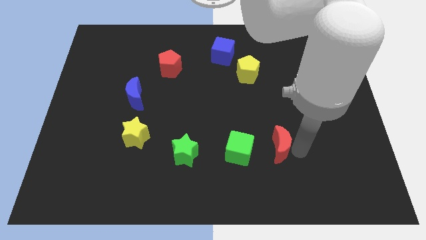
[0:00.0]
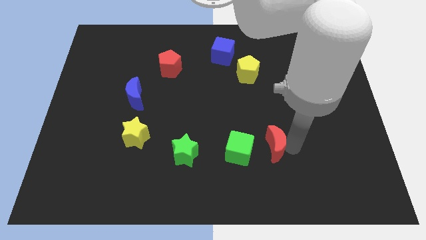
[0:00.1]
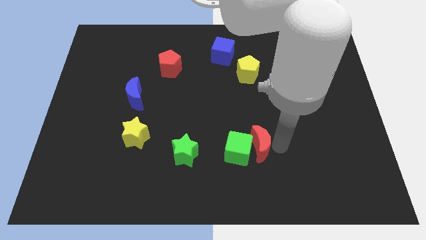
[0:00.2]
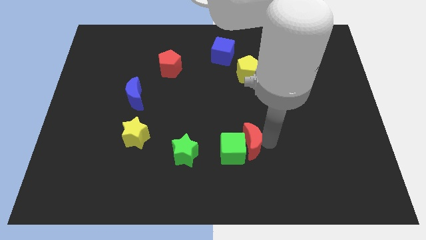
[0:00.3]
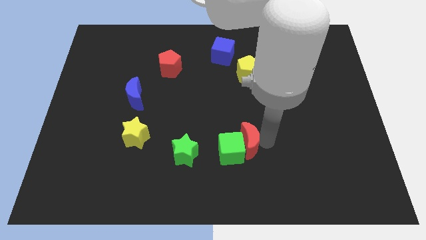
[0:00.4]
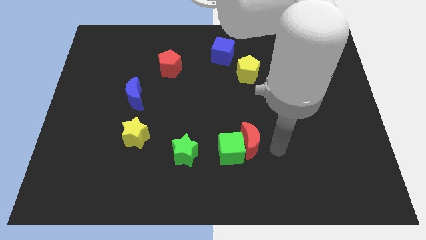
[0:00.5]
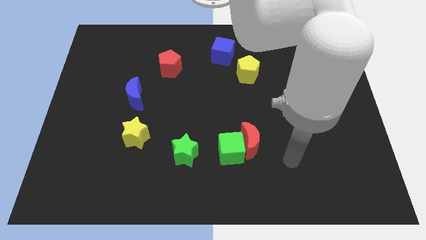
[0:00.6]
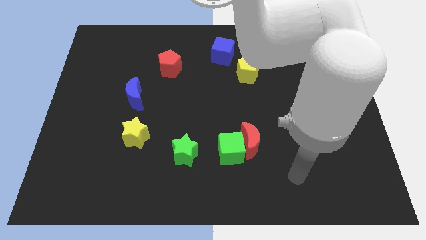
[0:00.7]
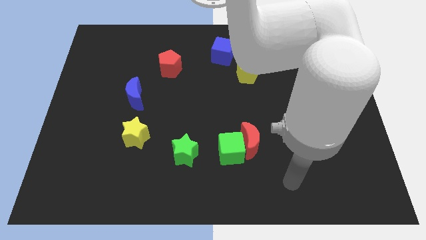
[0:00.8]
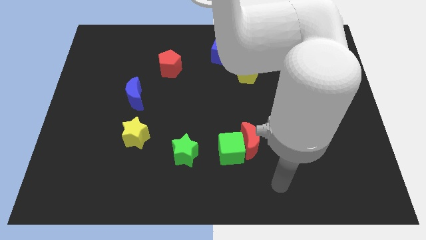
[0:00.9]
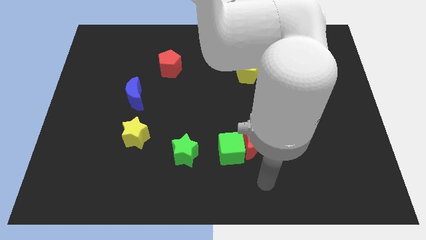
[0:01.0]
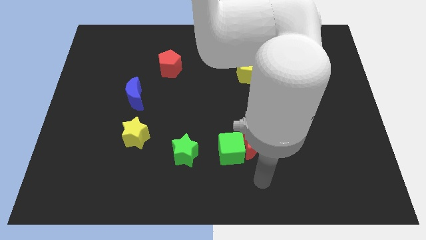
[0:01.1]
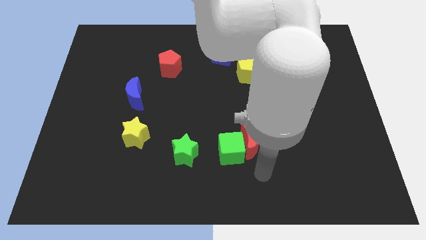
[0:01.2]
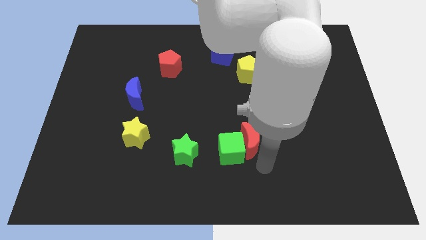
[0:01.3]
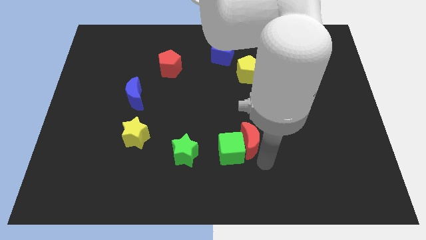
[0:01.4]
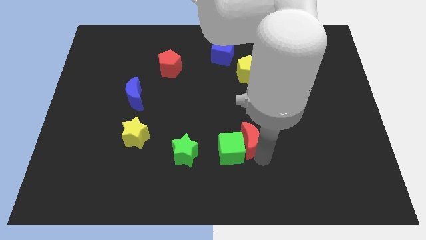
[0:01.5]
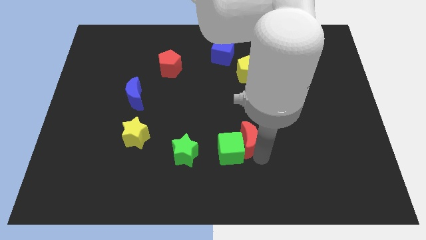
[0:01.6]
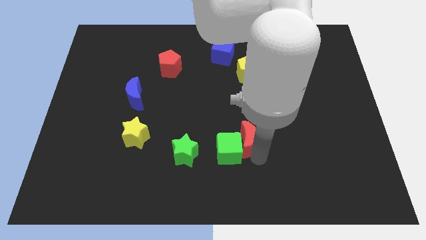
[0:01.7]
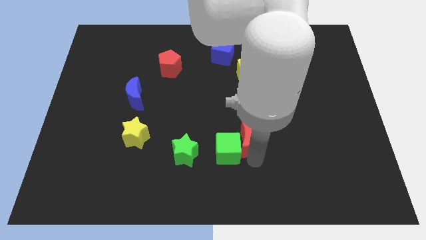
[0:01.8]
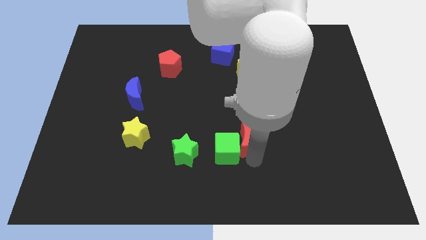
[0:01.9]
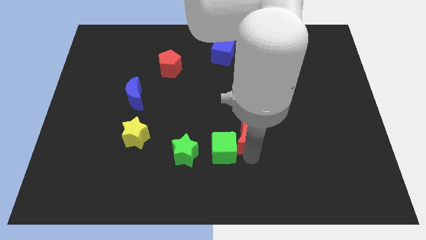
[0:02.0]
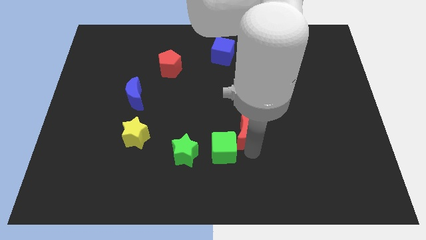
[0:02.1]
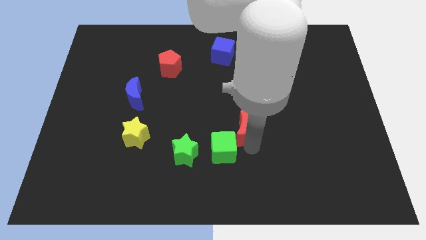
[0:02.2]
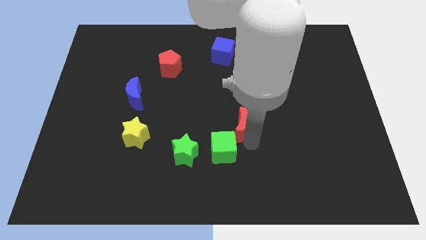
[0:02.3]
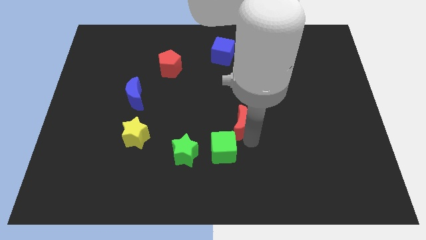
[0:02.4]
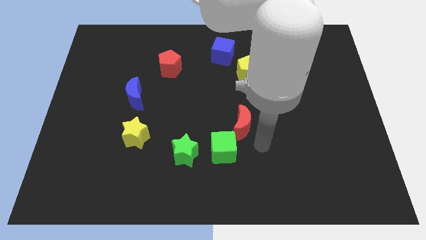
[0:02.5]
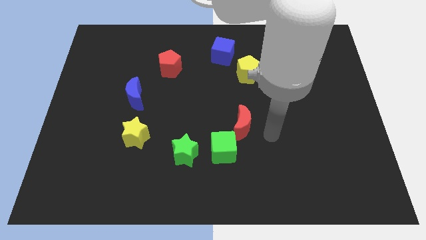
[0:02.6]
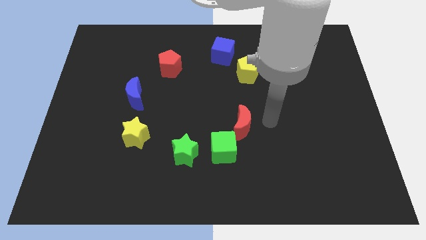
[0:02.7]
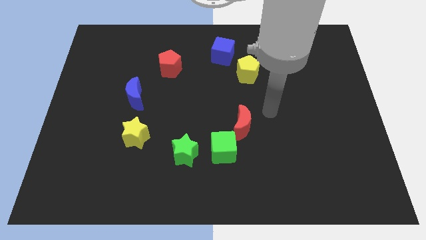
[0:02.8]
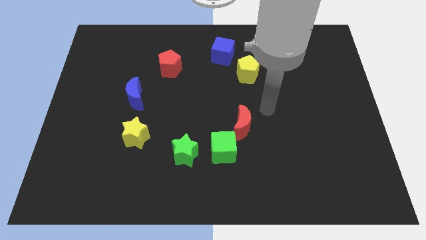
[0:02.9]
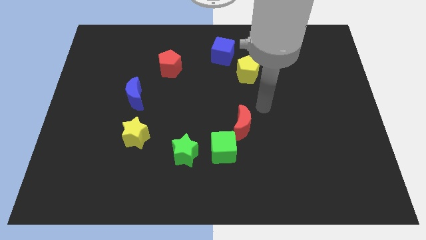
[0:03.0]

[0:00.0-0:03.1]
move the red crescent to top right of green cube

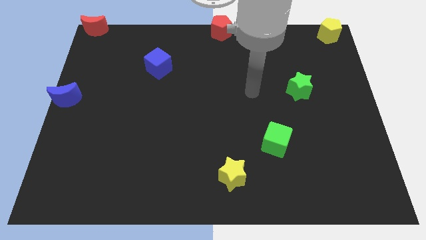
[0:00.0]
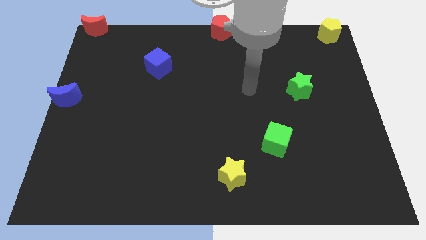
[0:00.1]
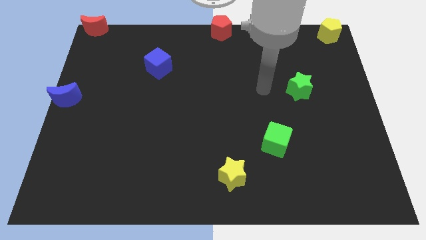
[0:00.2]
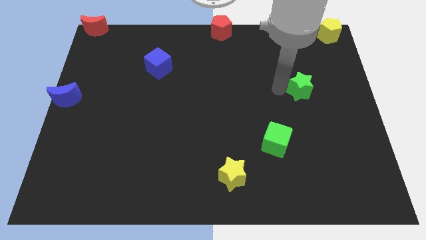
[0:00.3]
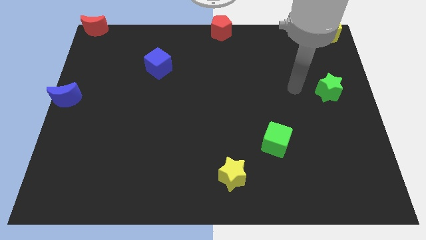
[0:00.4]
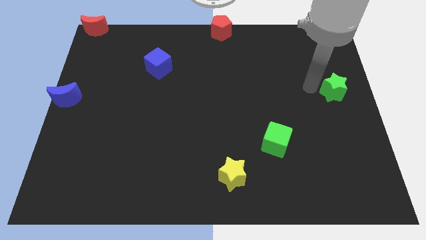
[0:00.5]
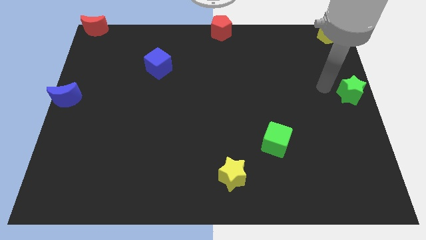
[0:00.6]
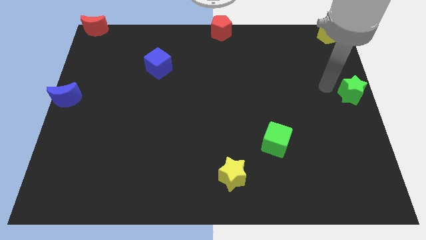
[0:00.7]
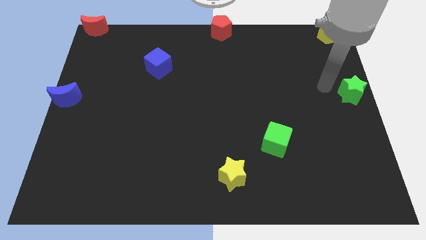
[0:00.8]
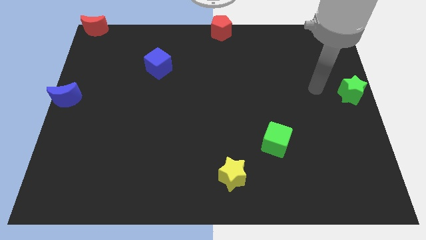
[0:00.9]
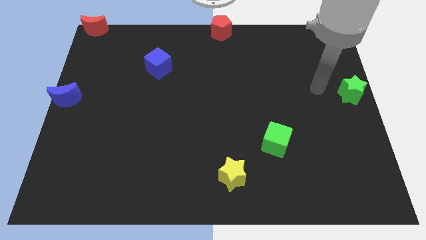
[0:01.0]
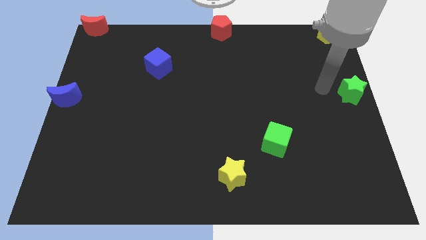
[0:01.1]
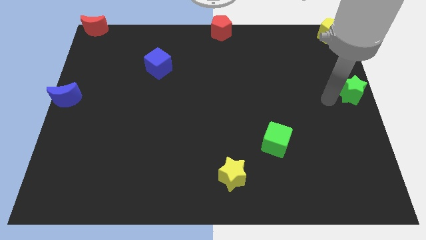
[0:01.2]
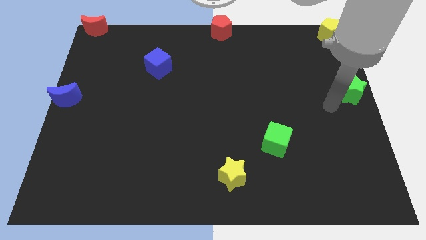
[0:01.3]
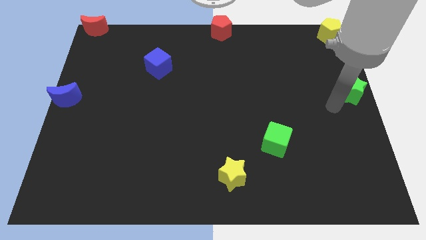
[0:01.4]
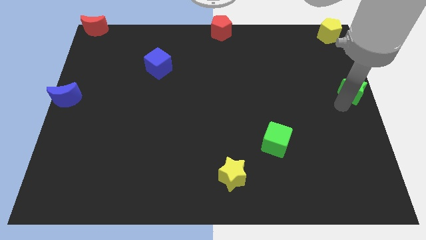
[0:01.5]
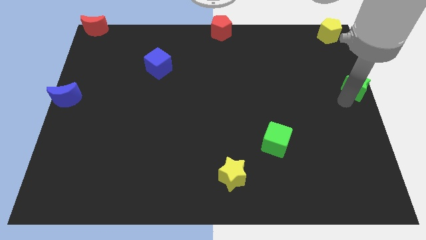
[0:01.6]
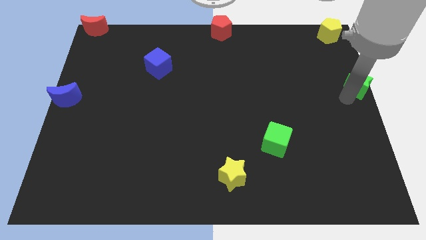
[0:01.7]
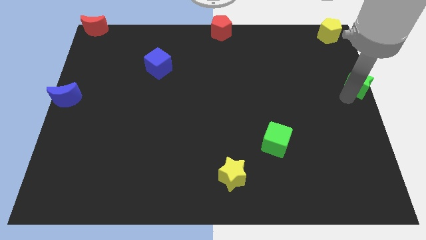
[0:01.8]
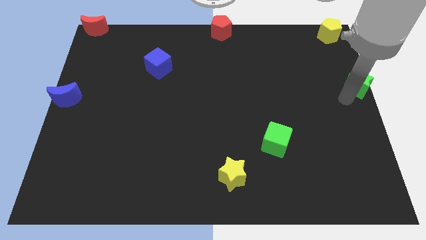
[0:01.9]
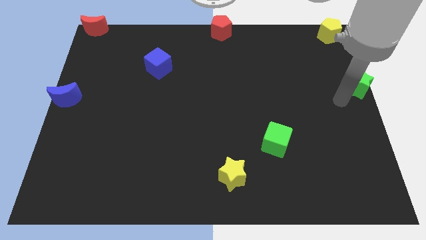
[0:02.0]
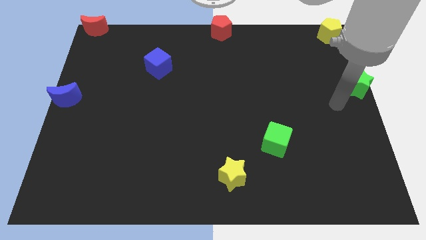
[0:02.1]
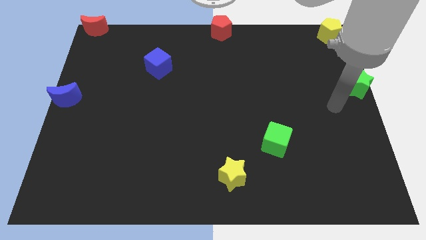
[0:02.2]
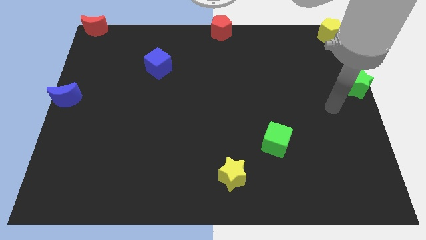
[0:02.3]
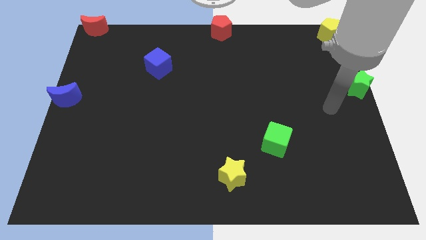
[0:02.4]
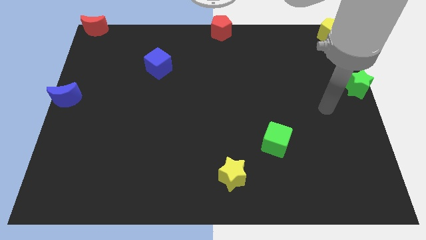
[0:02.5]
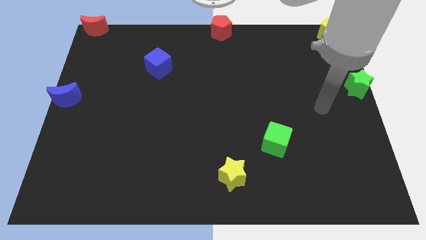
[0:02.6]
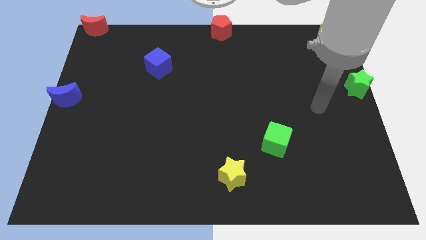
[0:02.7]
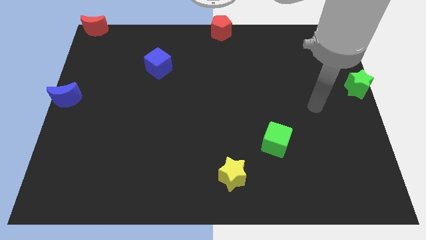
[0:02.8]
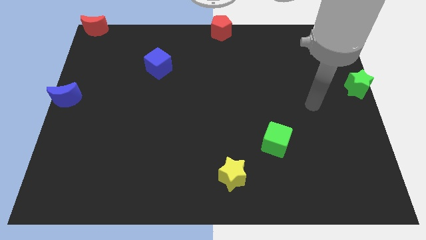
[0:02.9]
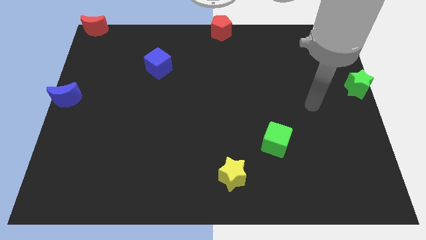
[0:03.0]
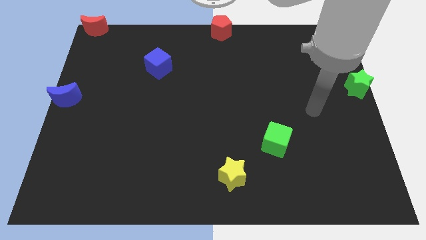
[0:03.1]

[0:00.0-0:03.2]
place green star to the center right of the board

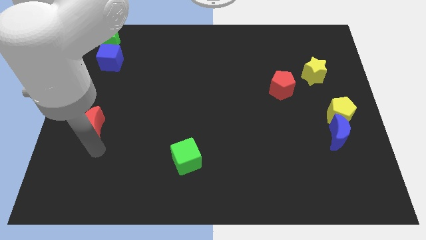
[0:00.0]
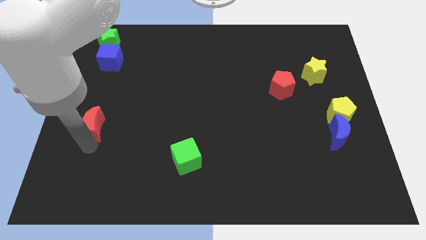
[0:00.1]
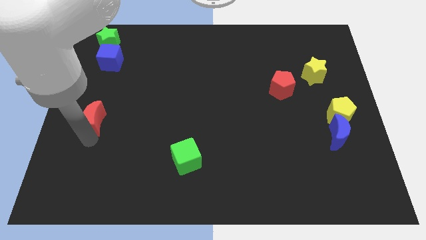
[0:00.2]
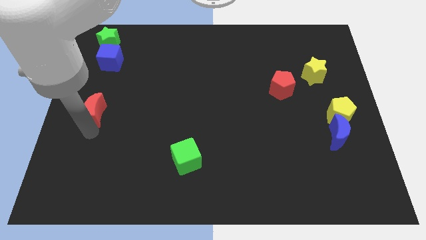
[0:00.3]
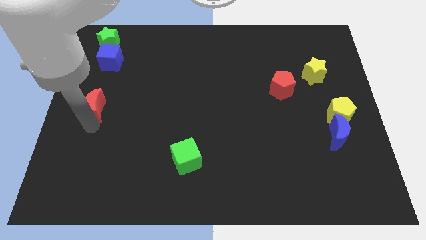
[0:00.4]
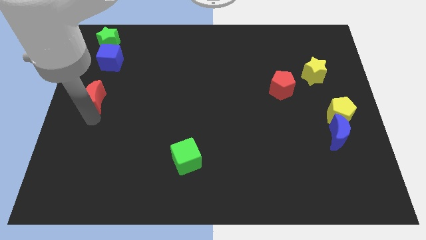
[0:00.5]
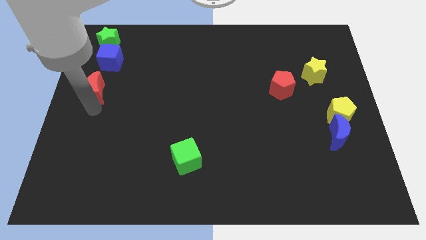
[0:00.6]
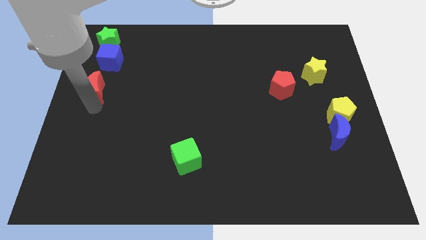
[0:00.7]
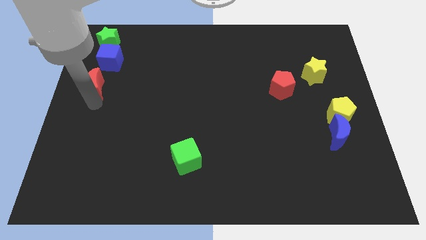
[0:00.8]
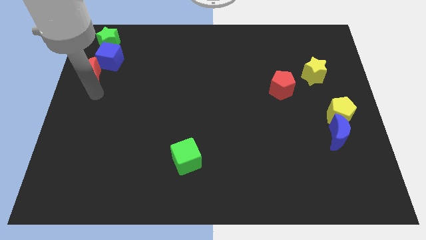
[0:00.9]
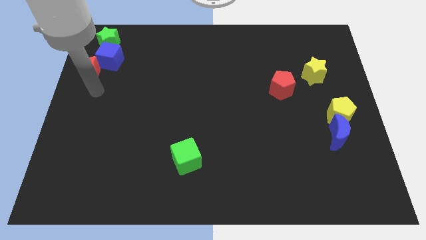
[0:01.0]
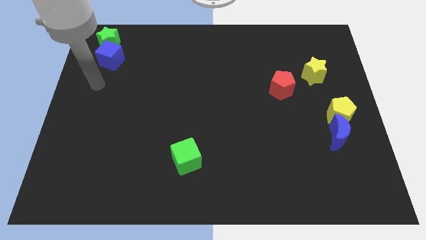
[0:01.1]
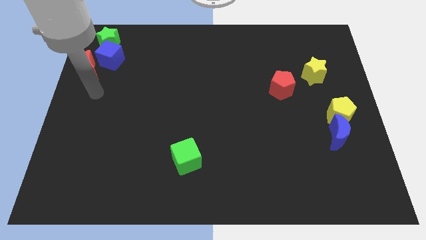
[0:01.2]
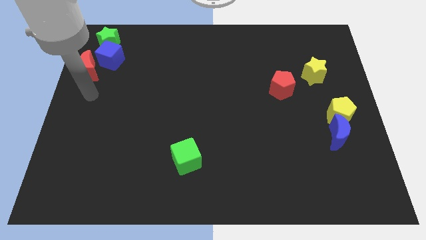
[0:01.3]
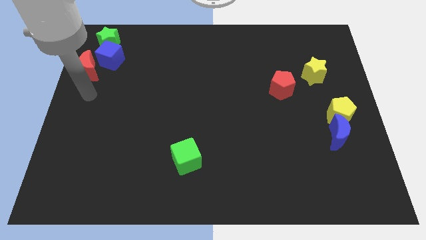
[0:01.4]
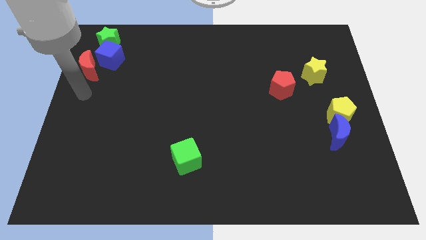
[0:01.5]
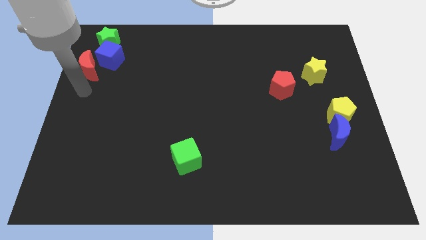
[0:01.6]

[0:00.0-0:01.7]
push the red crescent to the top left corner of the board

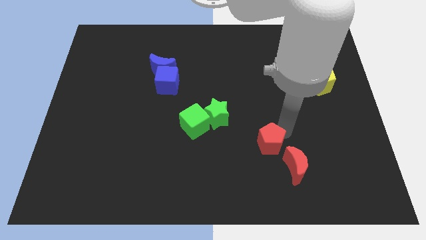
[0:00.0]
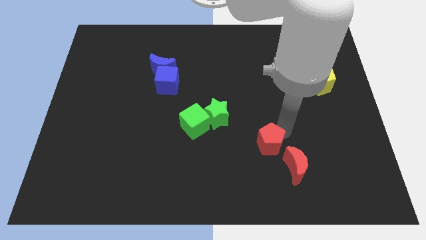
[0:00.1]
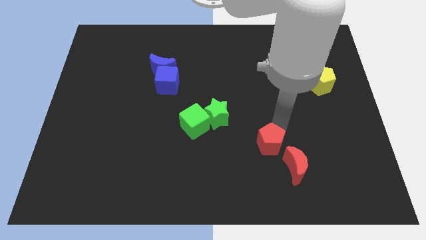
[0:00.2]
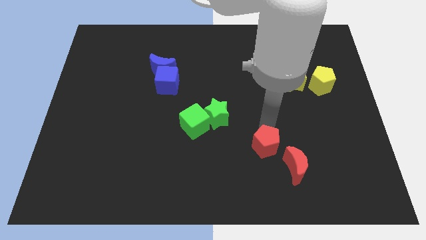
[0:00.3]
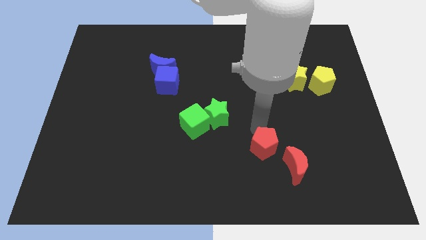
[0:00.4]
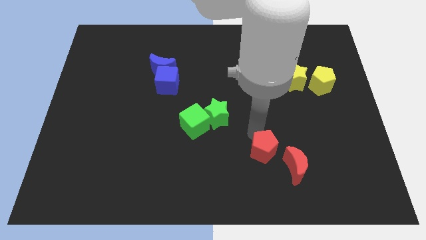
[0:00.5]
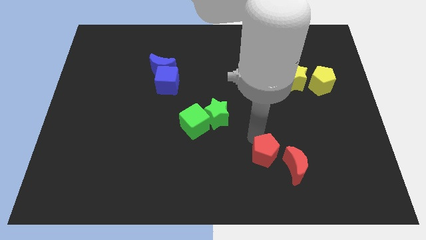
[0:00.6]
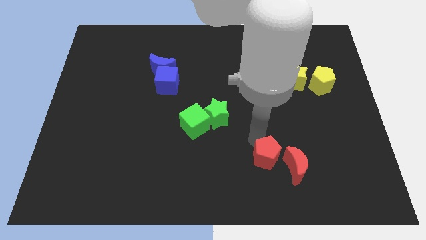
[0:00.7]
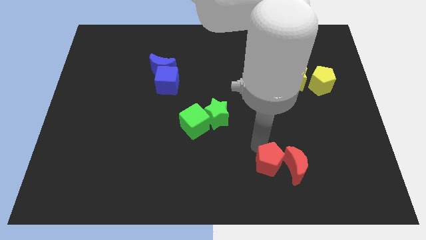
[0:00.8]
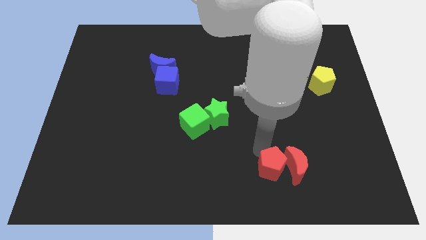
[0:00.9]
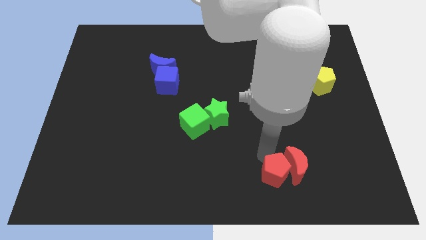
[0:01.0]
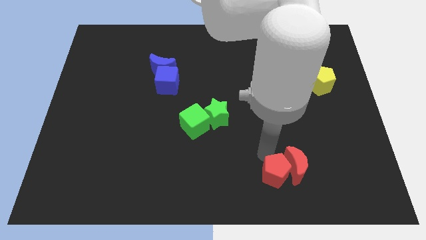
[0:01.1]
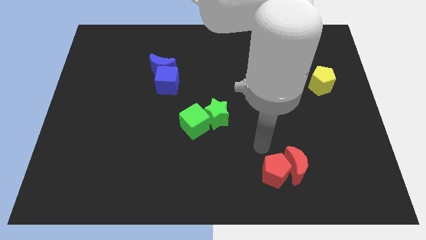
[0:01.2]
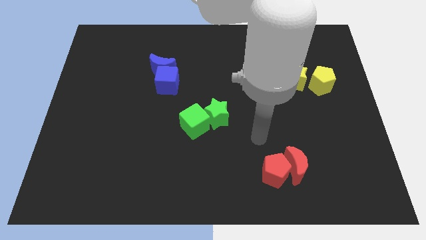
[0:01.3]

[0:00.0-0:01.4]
place the red pentagon close to the red moon
